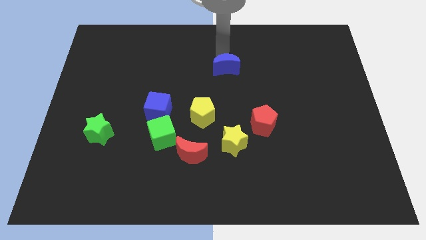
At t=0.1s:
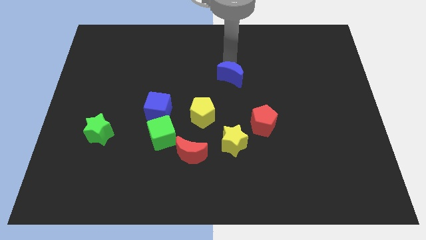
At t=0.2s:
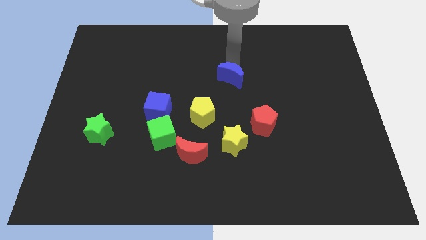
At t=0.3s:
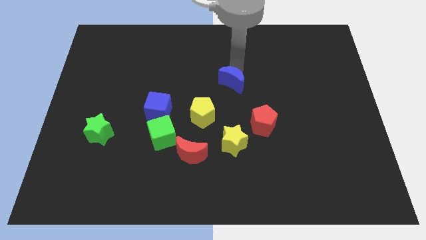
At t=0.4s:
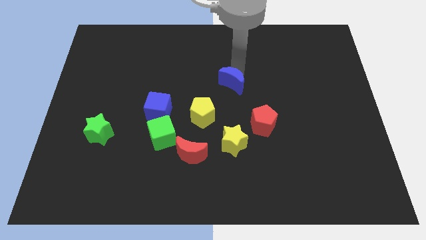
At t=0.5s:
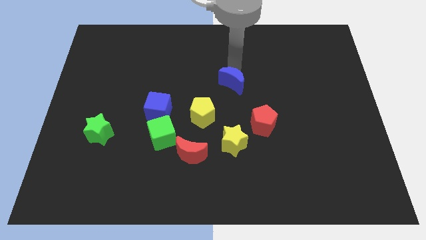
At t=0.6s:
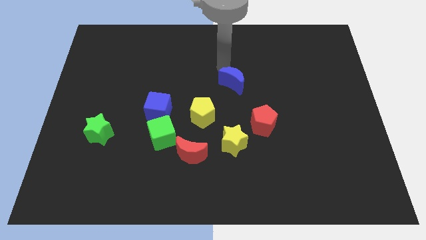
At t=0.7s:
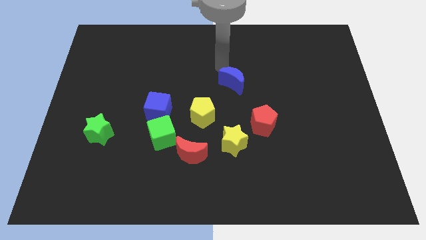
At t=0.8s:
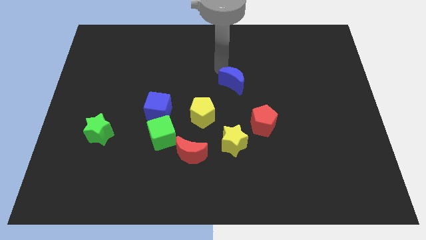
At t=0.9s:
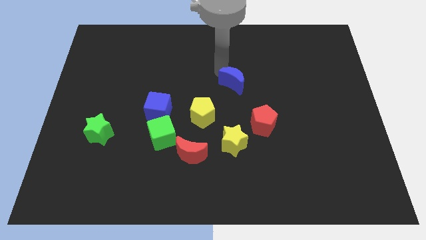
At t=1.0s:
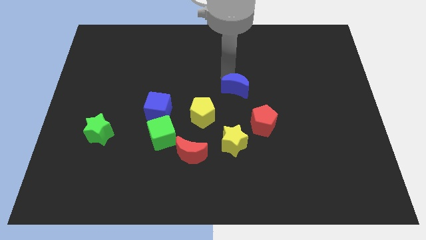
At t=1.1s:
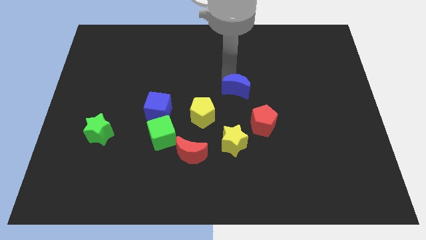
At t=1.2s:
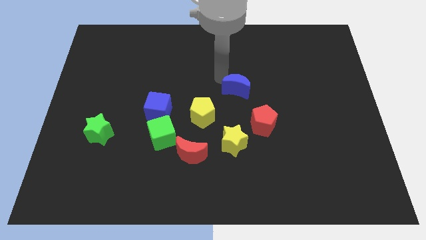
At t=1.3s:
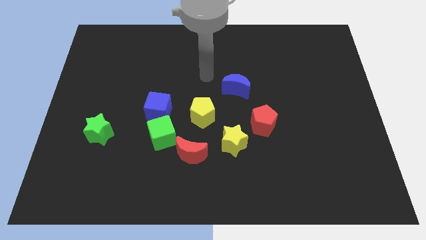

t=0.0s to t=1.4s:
place the blue crescent diagonally on the top right side of the yellow pentagon

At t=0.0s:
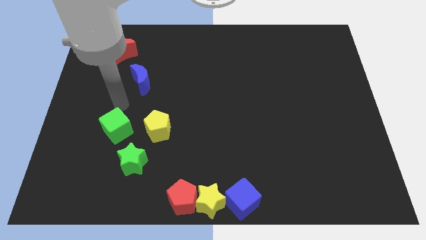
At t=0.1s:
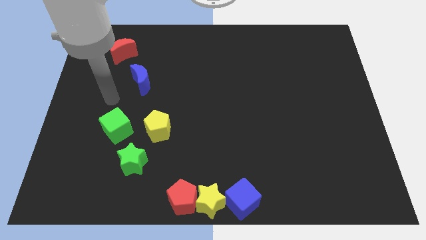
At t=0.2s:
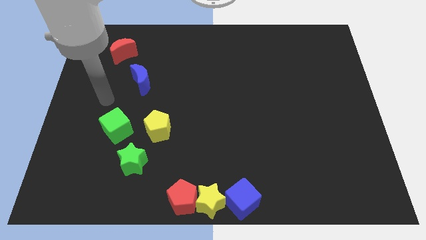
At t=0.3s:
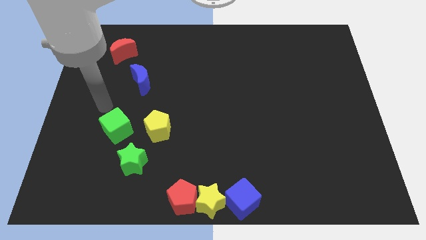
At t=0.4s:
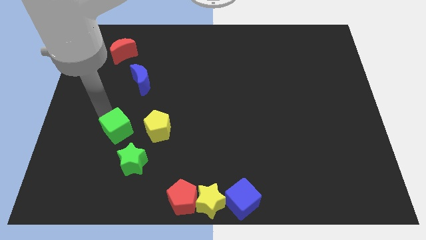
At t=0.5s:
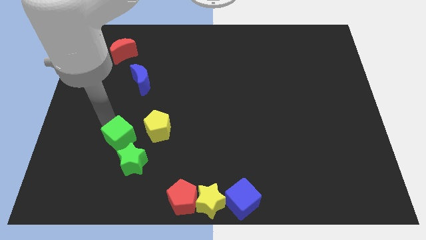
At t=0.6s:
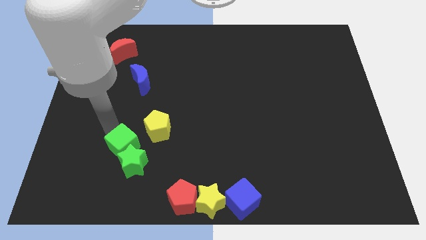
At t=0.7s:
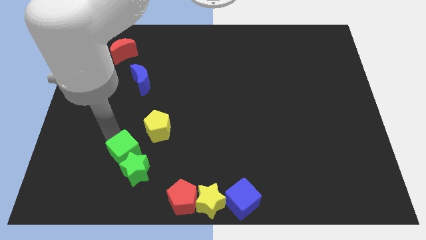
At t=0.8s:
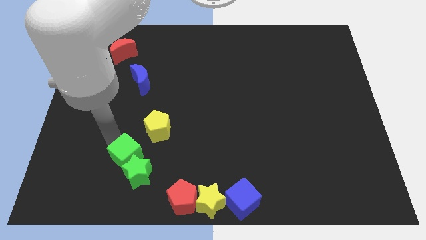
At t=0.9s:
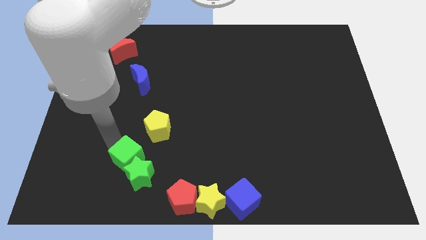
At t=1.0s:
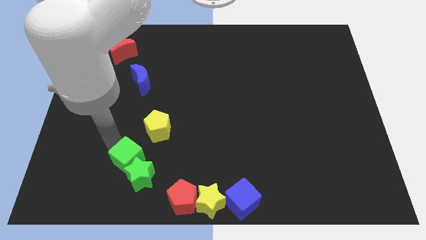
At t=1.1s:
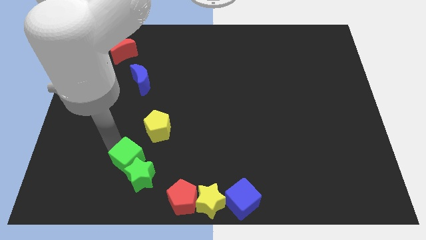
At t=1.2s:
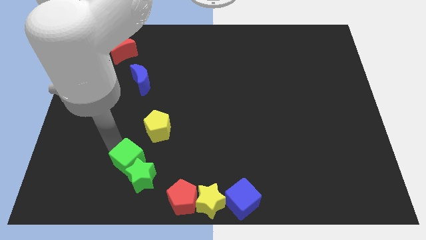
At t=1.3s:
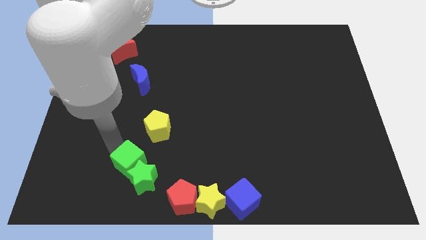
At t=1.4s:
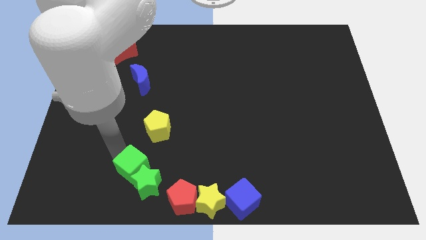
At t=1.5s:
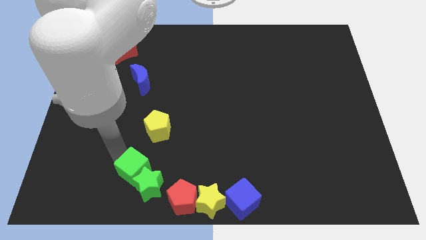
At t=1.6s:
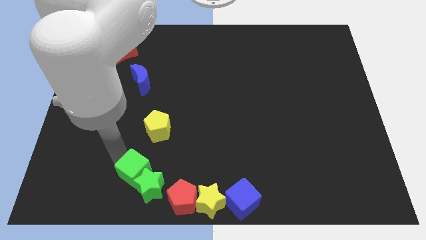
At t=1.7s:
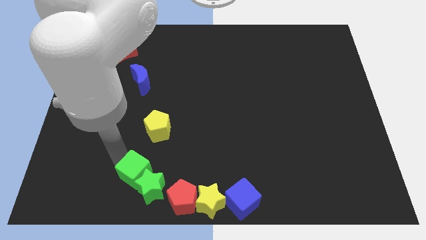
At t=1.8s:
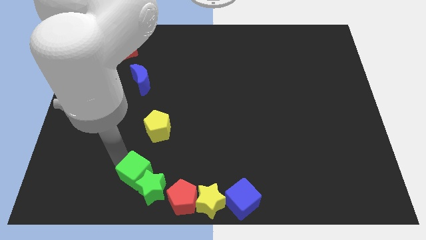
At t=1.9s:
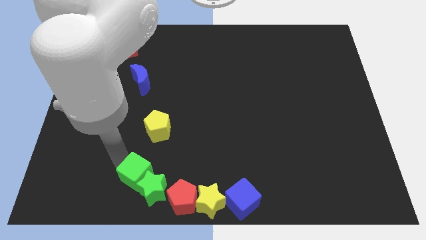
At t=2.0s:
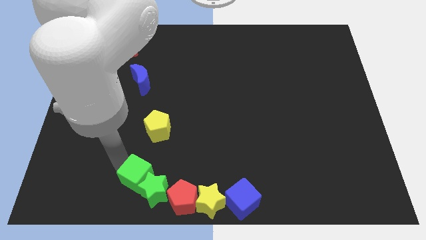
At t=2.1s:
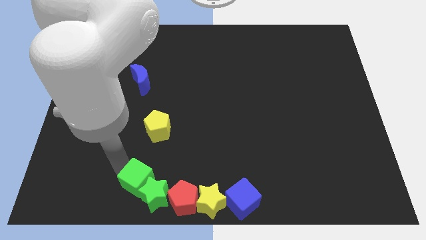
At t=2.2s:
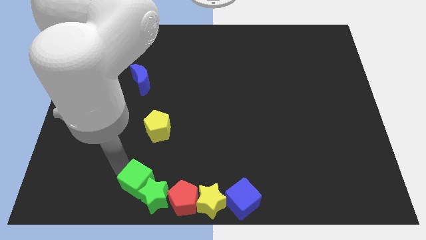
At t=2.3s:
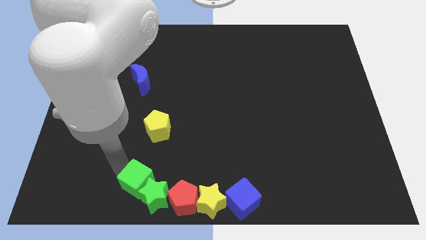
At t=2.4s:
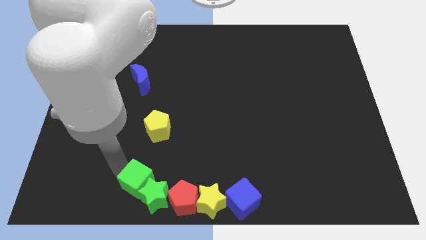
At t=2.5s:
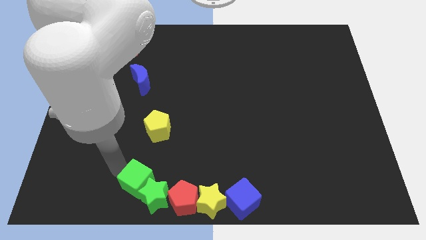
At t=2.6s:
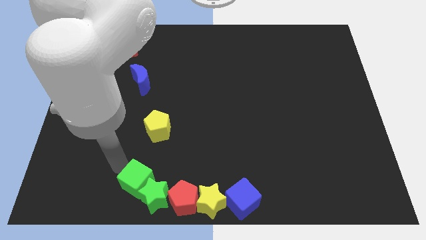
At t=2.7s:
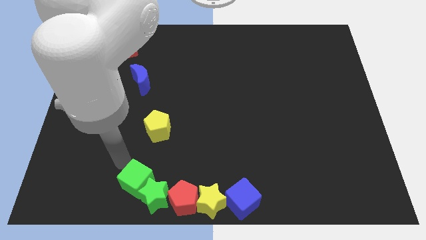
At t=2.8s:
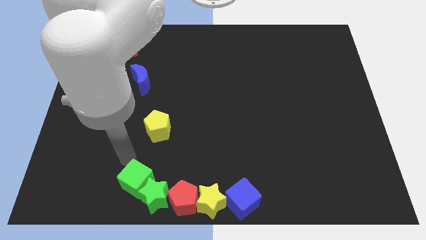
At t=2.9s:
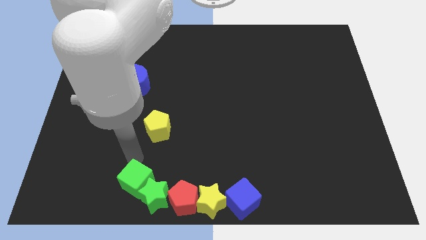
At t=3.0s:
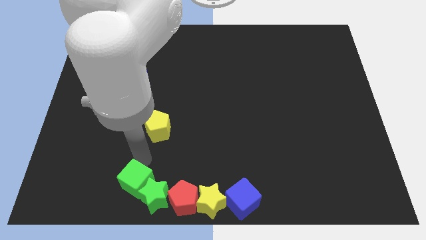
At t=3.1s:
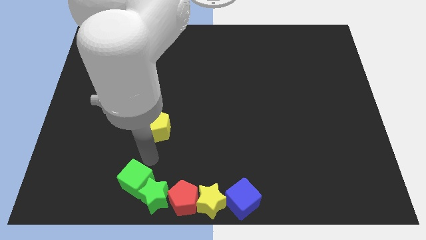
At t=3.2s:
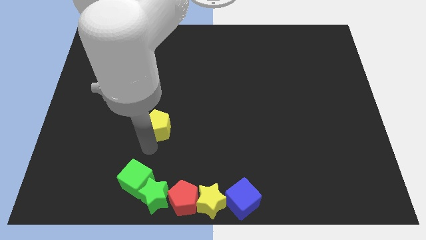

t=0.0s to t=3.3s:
push the green cube along with the green star into the red pentagon

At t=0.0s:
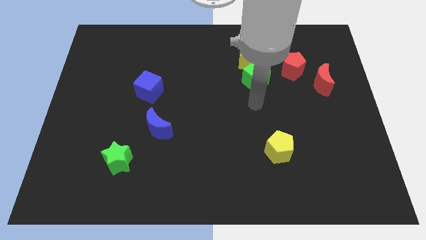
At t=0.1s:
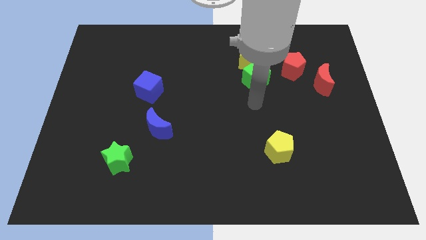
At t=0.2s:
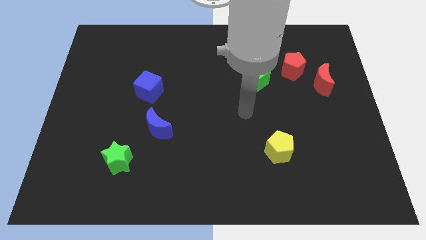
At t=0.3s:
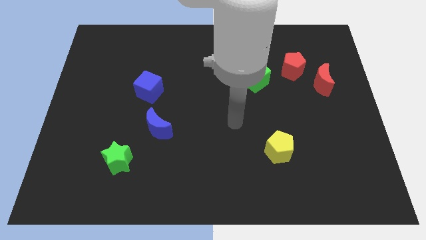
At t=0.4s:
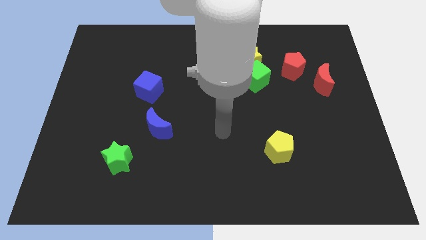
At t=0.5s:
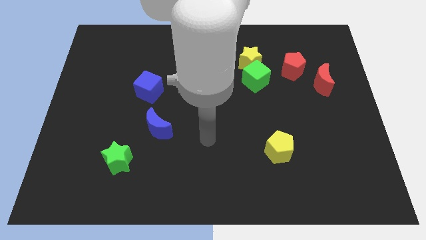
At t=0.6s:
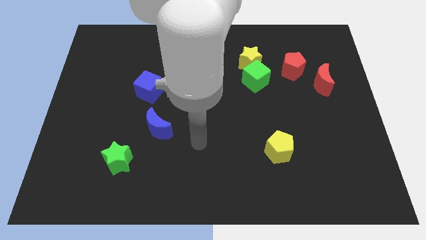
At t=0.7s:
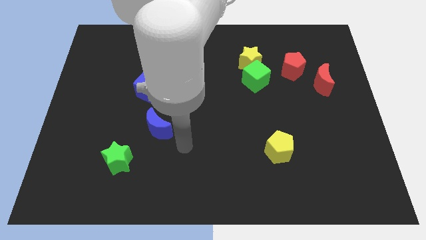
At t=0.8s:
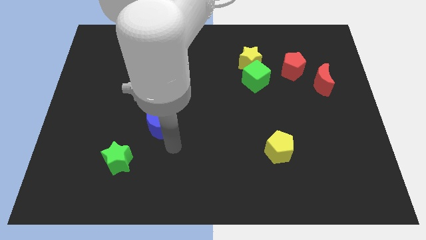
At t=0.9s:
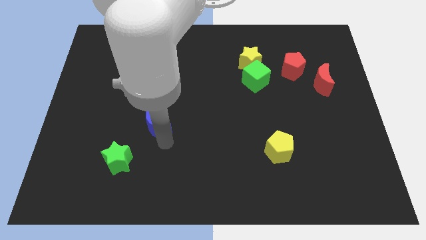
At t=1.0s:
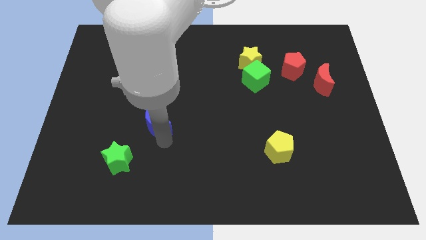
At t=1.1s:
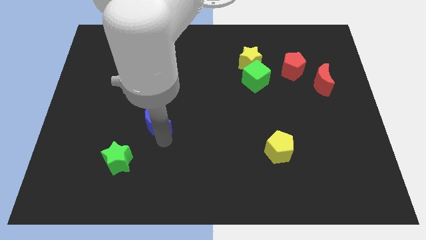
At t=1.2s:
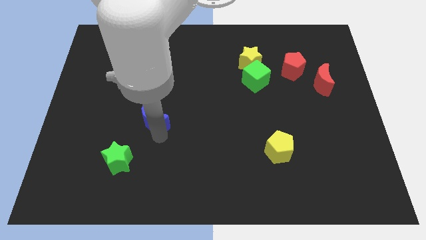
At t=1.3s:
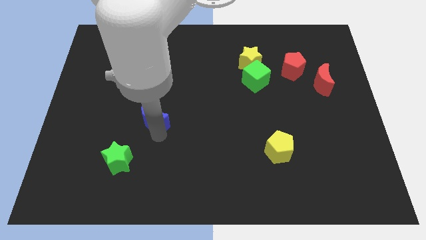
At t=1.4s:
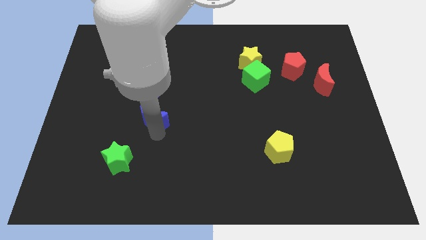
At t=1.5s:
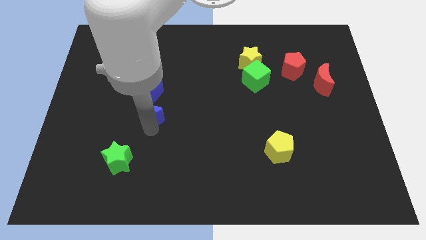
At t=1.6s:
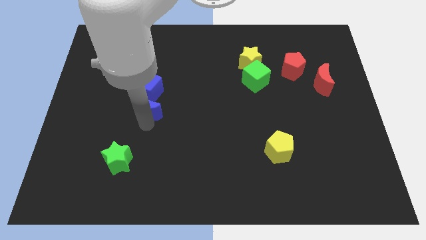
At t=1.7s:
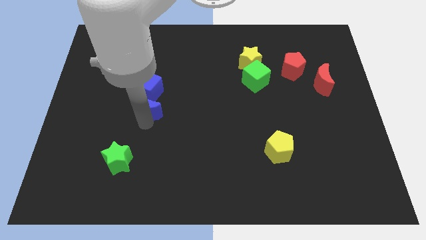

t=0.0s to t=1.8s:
push the blue crescent into blue cube on the board

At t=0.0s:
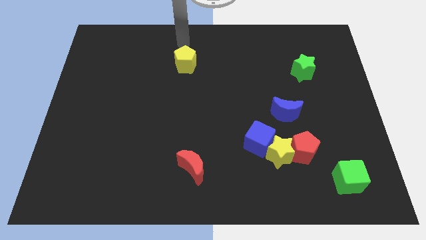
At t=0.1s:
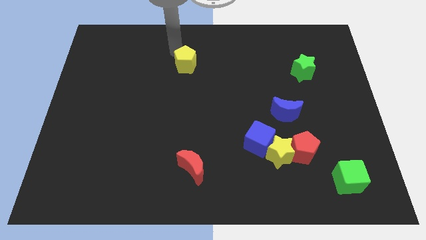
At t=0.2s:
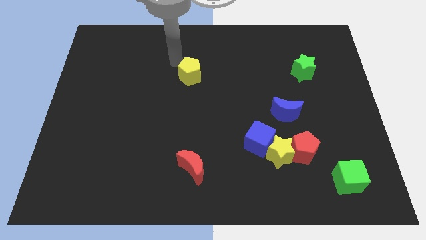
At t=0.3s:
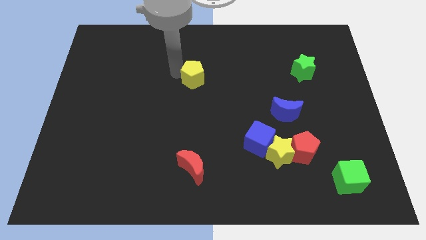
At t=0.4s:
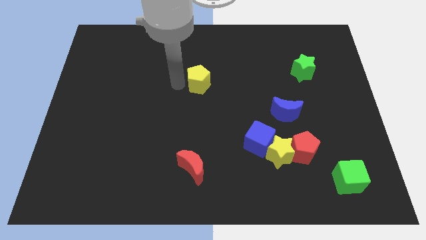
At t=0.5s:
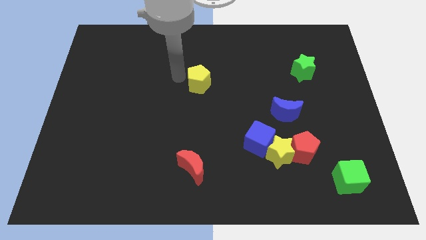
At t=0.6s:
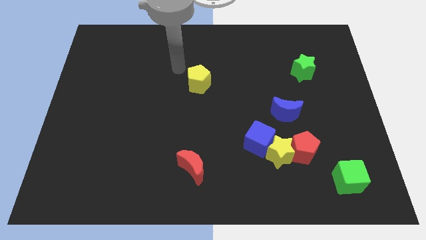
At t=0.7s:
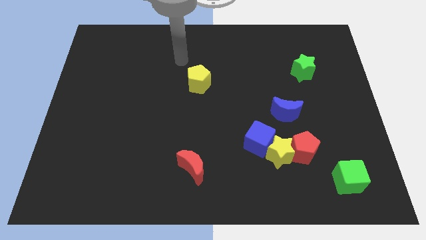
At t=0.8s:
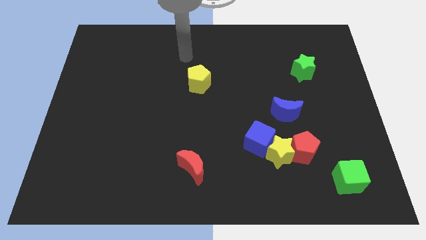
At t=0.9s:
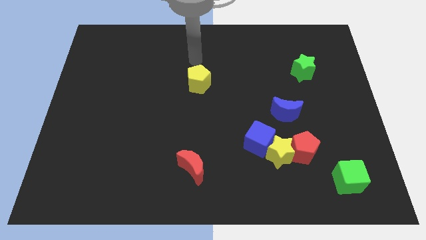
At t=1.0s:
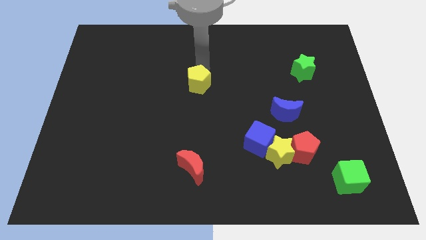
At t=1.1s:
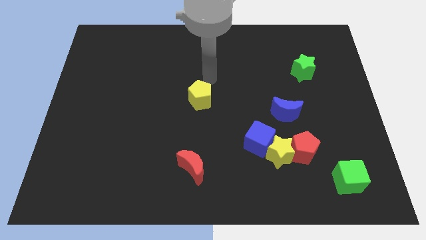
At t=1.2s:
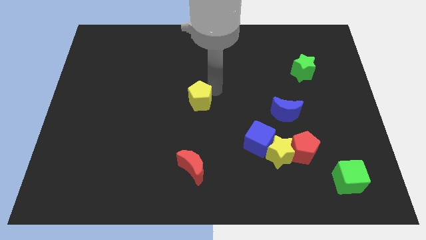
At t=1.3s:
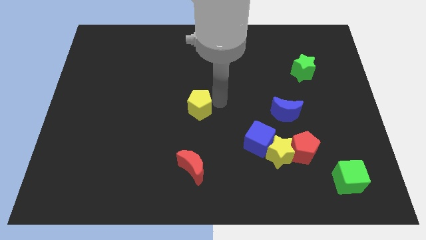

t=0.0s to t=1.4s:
place the yellow pentagon at center of the board

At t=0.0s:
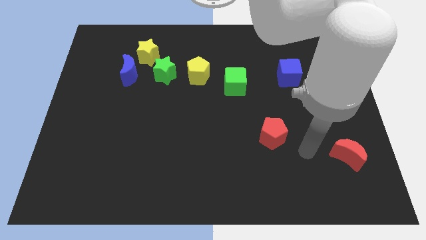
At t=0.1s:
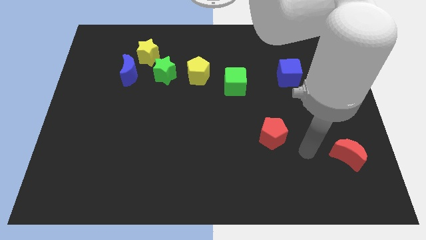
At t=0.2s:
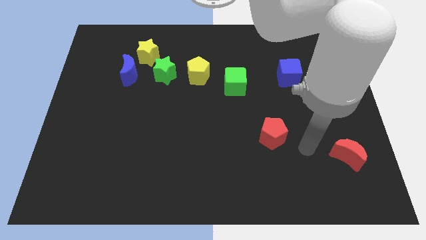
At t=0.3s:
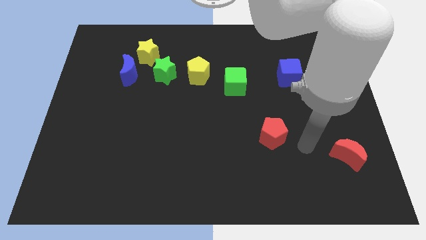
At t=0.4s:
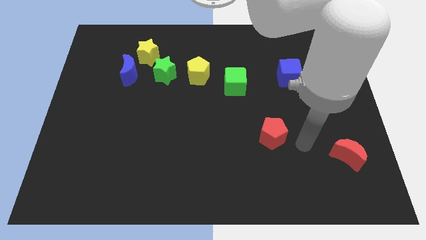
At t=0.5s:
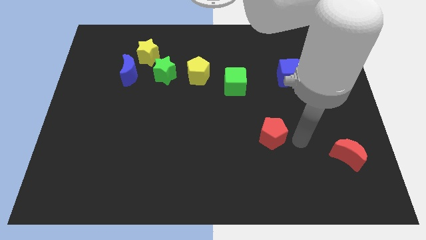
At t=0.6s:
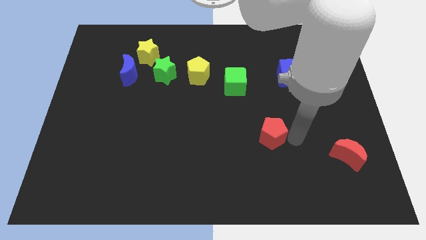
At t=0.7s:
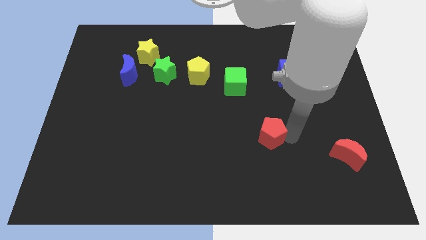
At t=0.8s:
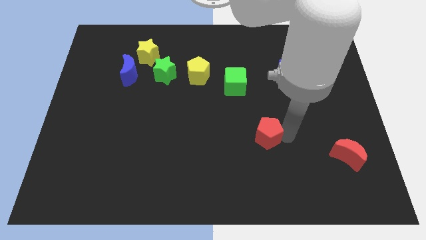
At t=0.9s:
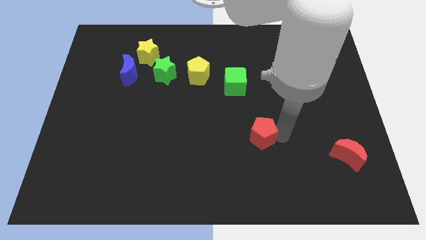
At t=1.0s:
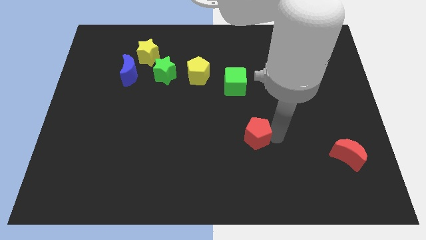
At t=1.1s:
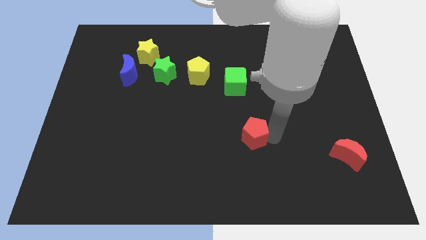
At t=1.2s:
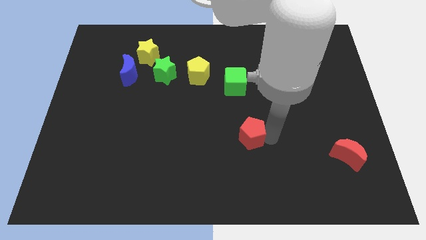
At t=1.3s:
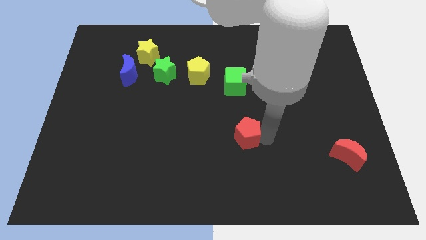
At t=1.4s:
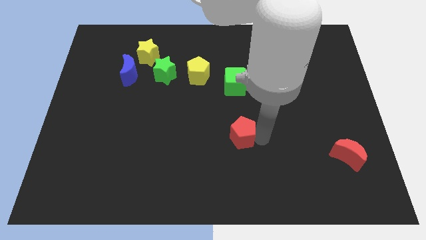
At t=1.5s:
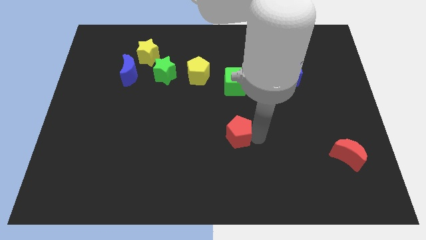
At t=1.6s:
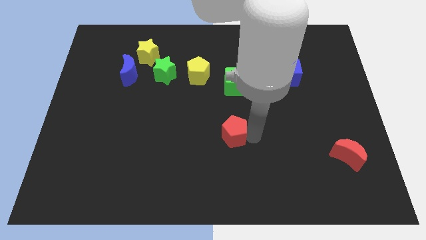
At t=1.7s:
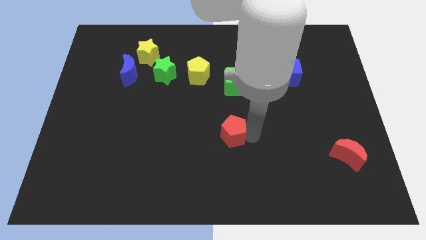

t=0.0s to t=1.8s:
move the red pentagon vertically below the green cube
